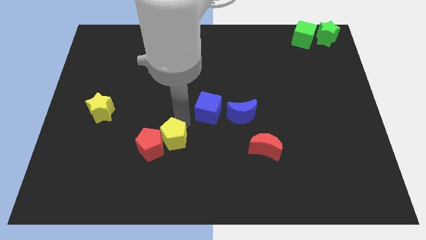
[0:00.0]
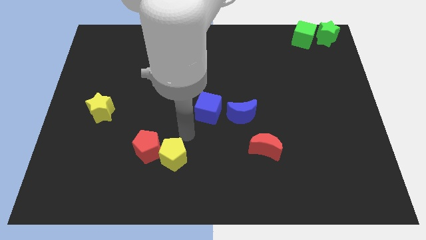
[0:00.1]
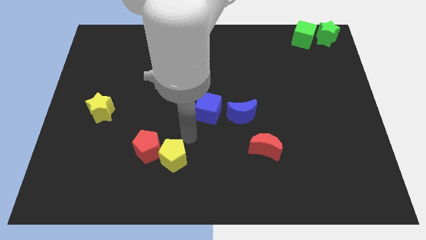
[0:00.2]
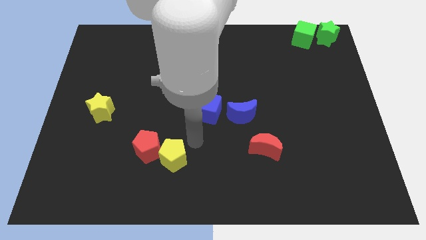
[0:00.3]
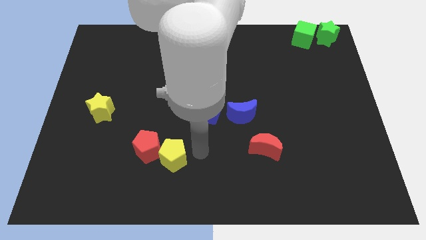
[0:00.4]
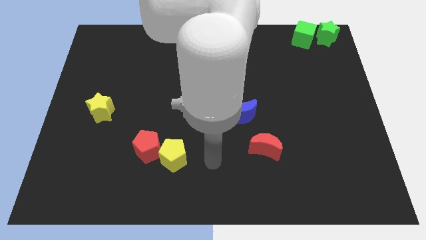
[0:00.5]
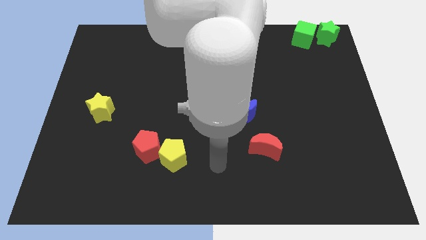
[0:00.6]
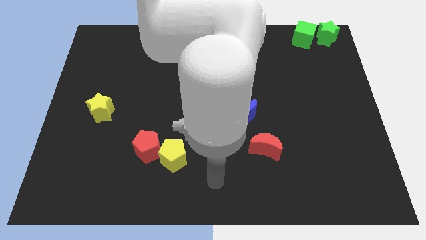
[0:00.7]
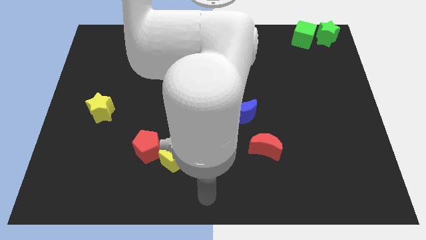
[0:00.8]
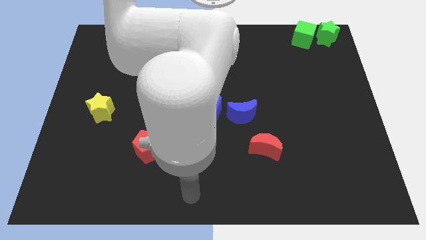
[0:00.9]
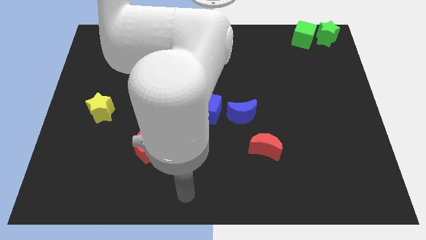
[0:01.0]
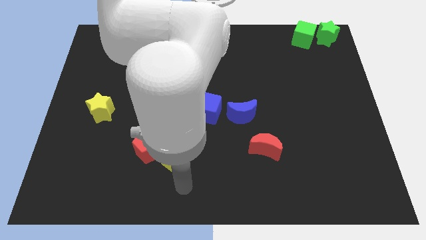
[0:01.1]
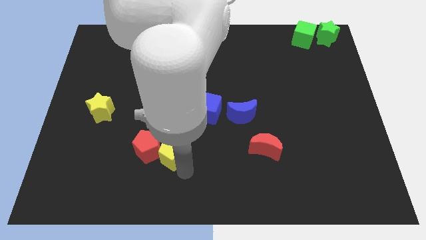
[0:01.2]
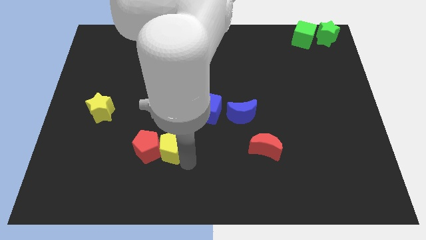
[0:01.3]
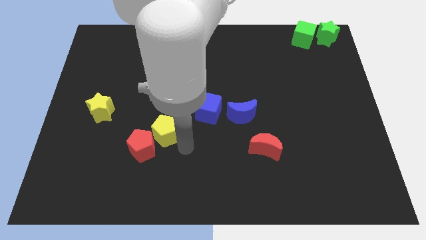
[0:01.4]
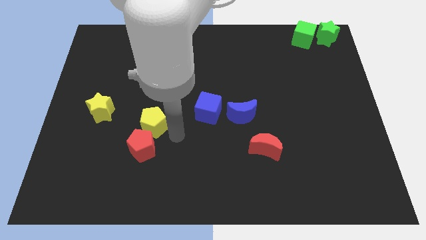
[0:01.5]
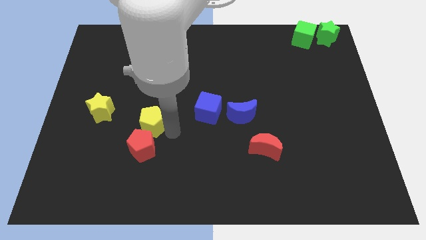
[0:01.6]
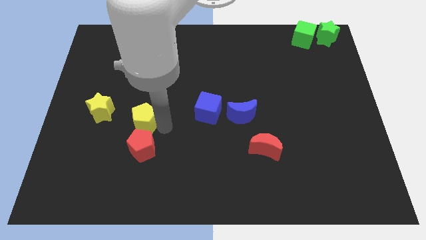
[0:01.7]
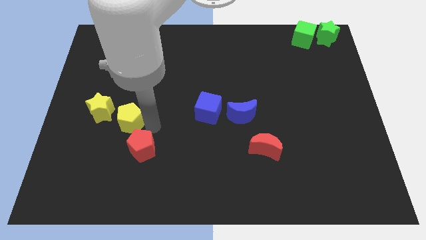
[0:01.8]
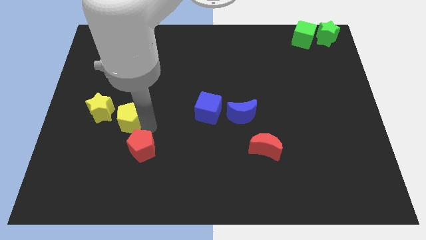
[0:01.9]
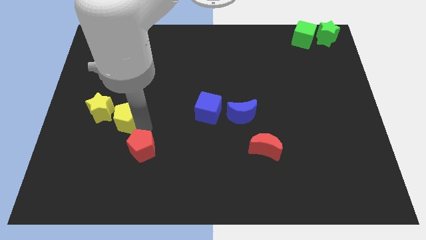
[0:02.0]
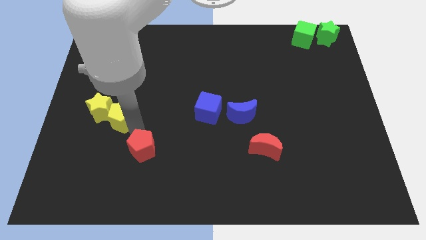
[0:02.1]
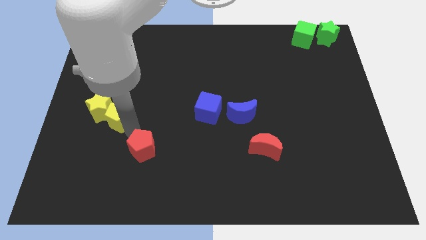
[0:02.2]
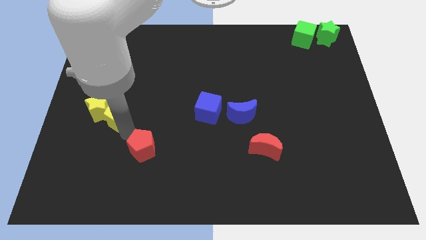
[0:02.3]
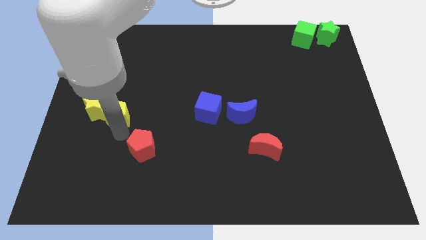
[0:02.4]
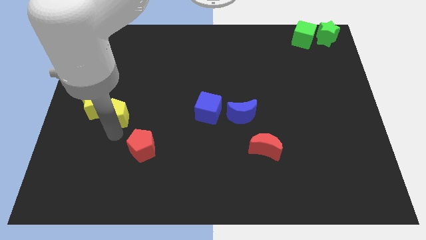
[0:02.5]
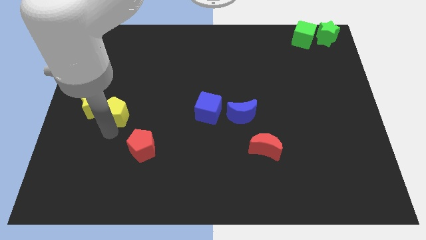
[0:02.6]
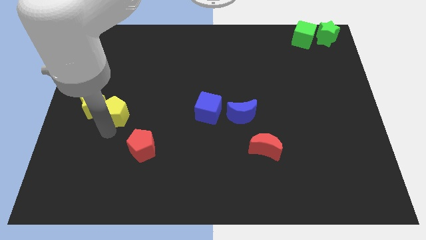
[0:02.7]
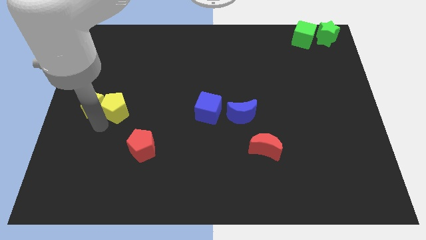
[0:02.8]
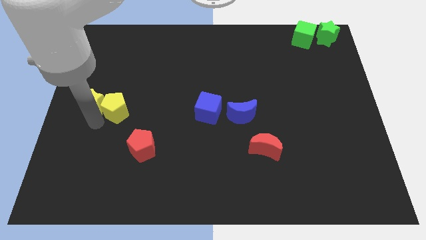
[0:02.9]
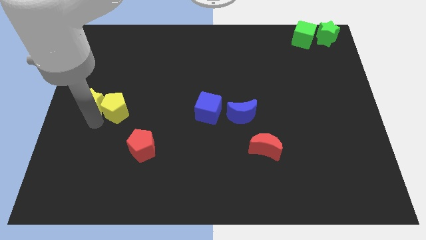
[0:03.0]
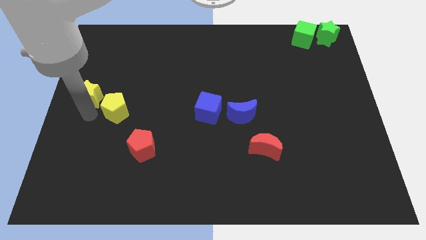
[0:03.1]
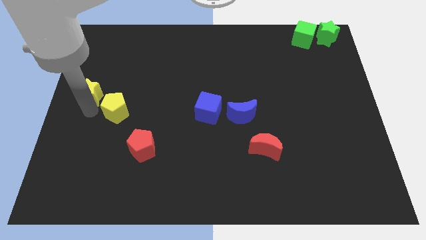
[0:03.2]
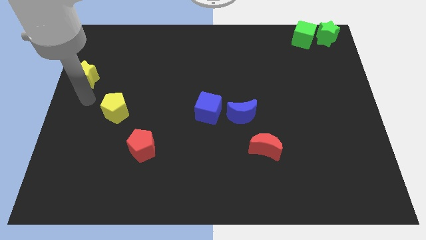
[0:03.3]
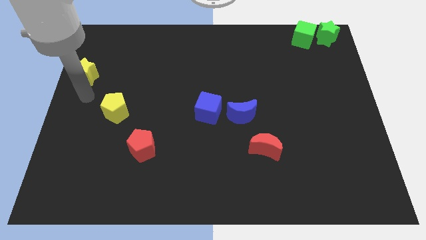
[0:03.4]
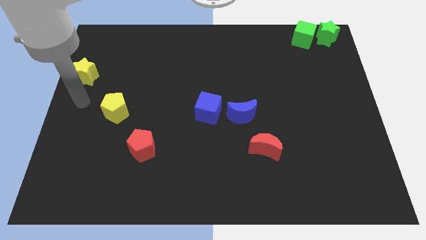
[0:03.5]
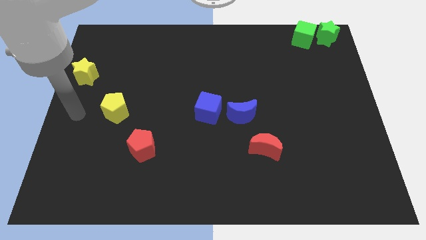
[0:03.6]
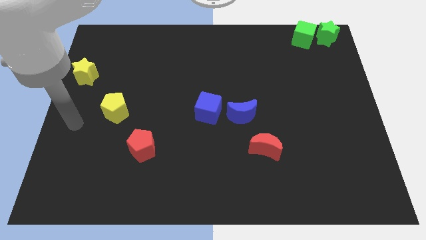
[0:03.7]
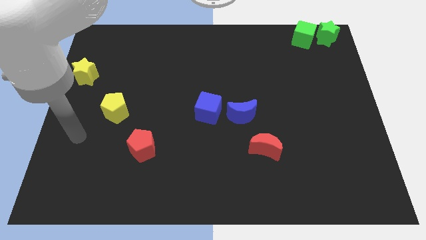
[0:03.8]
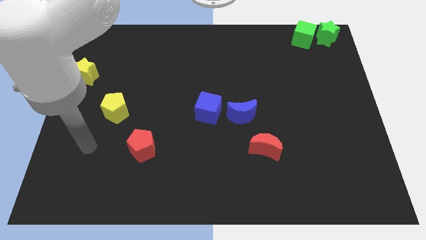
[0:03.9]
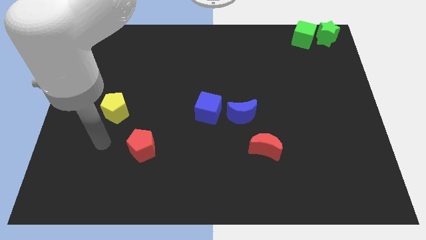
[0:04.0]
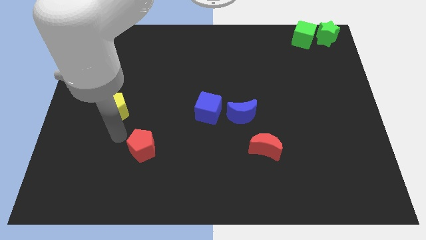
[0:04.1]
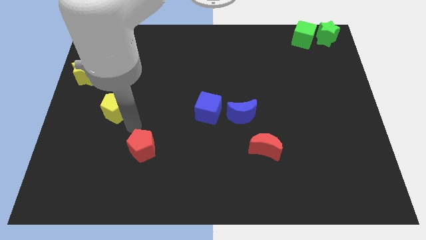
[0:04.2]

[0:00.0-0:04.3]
move yellow pentagon into the yellow star

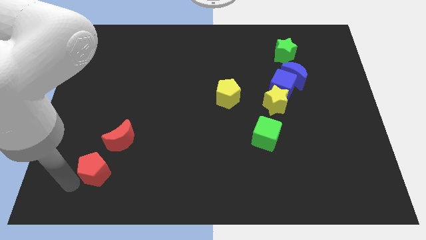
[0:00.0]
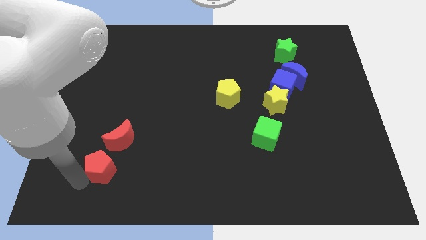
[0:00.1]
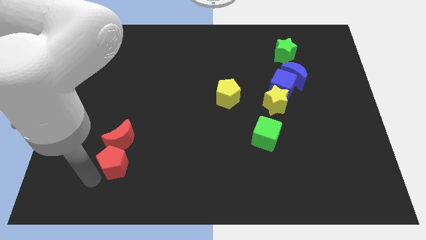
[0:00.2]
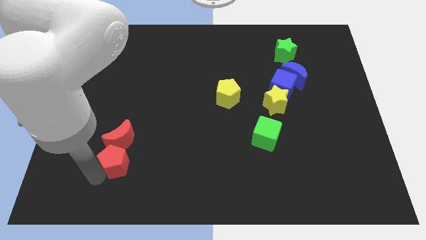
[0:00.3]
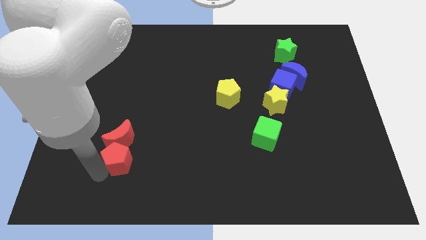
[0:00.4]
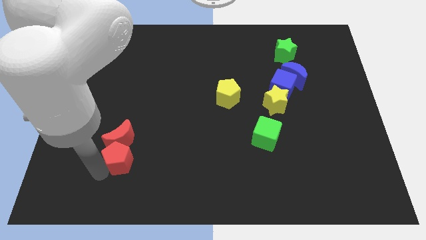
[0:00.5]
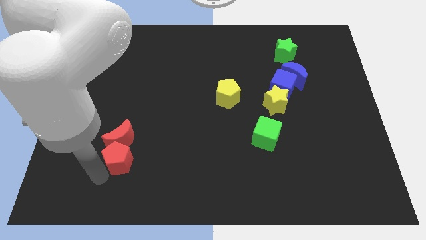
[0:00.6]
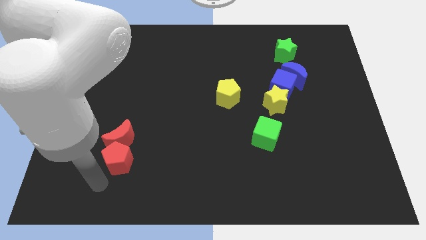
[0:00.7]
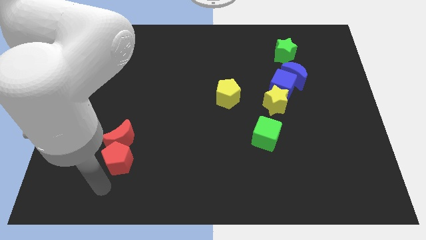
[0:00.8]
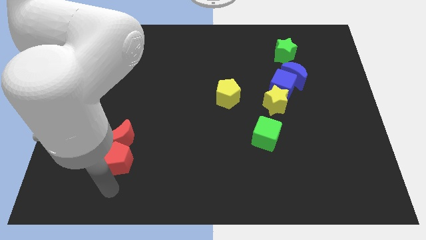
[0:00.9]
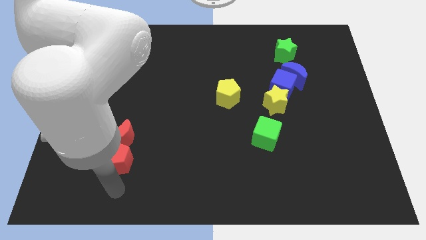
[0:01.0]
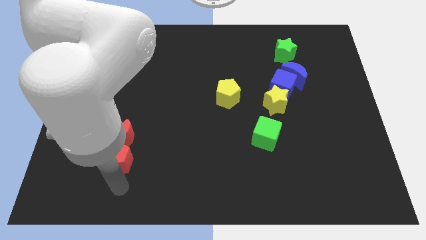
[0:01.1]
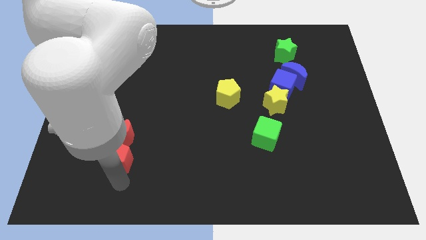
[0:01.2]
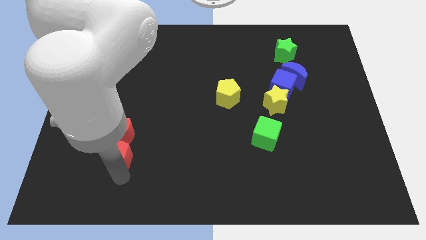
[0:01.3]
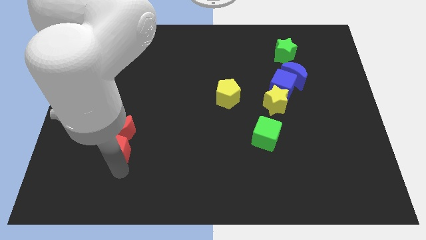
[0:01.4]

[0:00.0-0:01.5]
put the red pentagon into the red moon

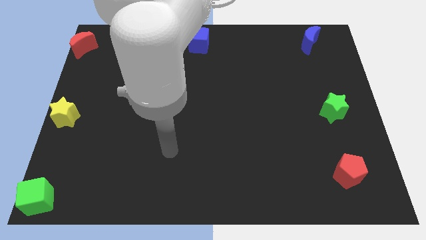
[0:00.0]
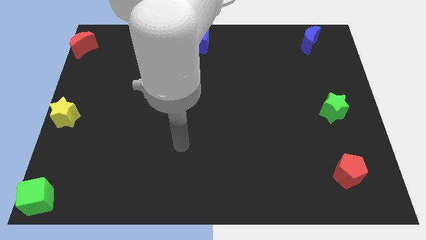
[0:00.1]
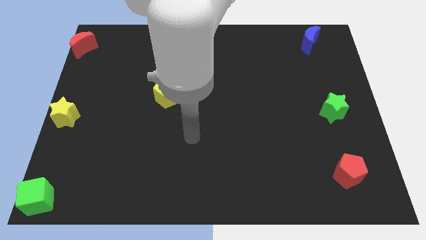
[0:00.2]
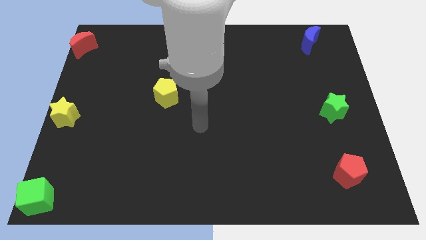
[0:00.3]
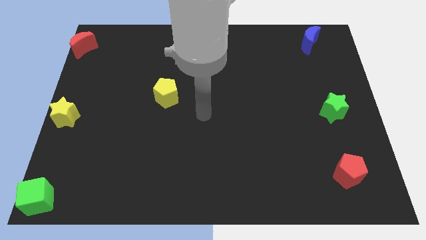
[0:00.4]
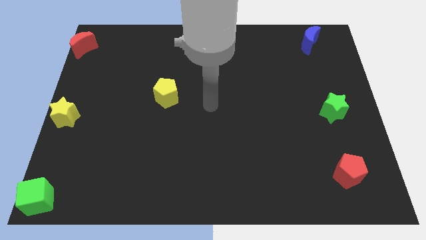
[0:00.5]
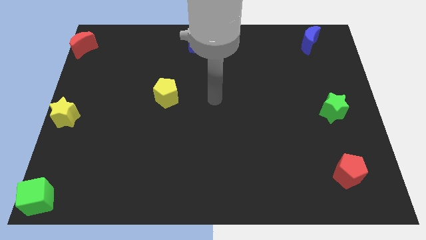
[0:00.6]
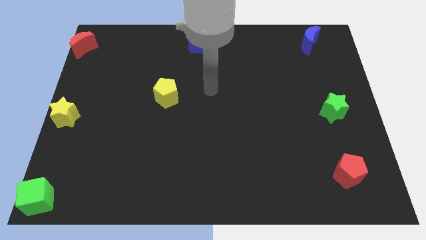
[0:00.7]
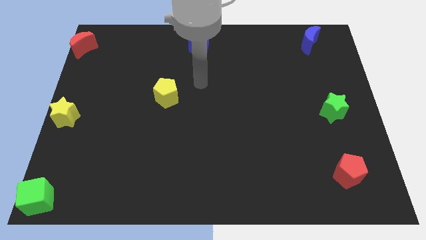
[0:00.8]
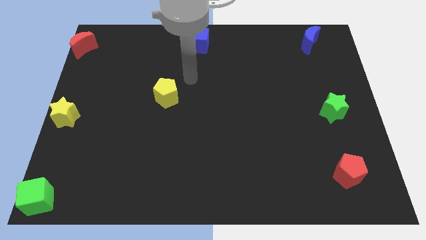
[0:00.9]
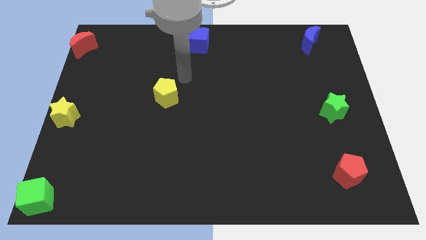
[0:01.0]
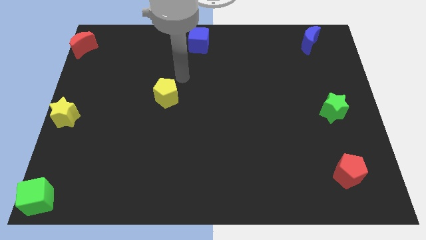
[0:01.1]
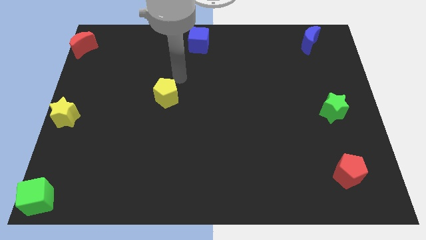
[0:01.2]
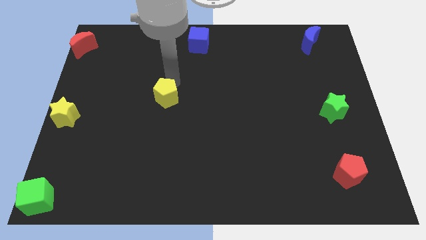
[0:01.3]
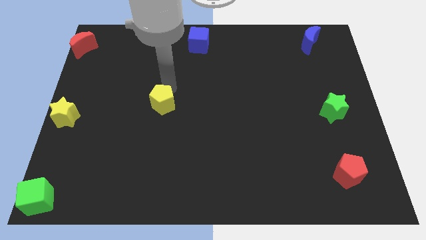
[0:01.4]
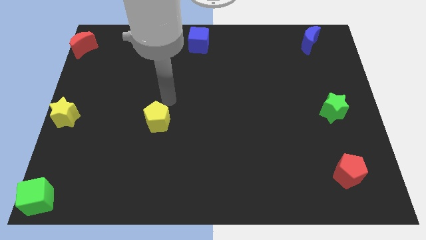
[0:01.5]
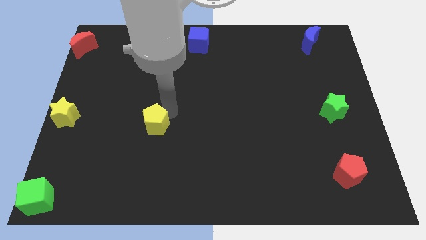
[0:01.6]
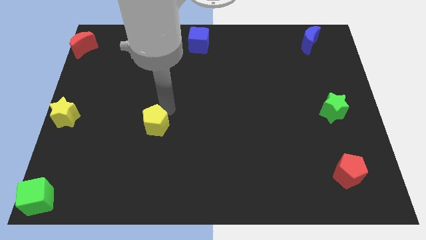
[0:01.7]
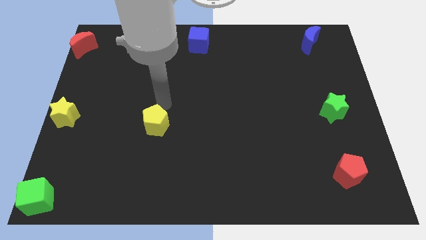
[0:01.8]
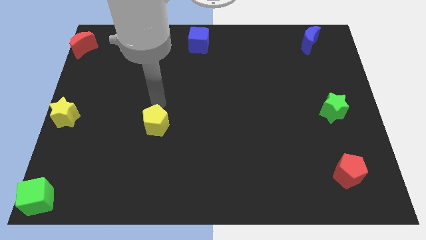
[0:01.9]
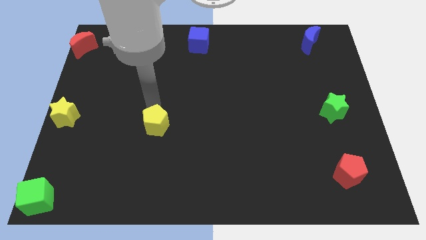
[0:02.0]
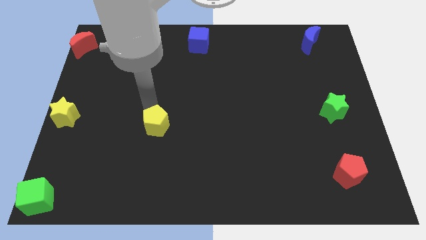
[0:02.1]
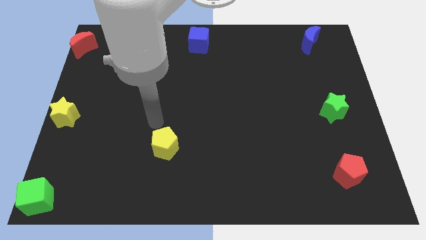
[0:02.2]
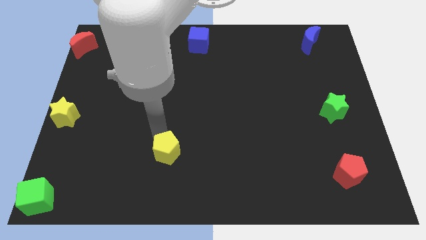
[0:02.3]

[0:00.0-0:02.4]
move the yellow pentagon to the center of the board

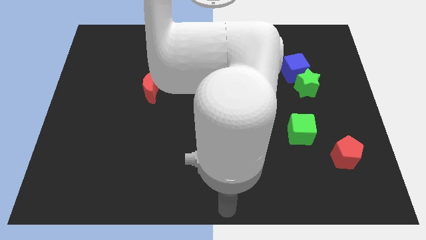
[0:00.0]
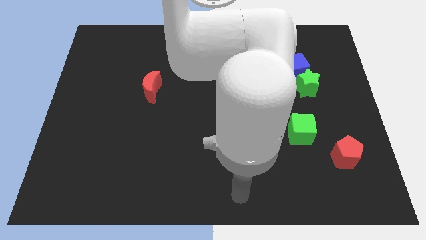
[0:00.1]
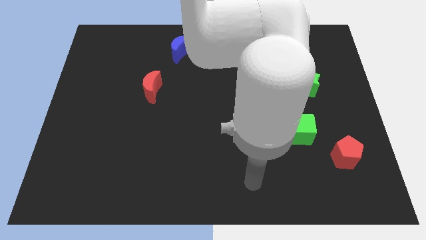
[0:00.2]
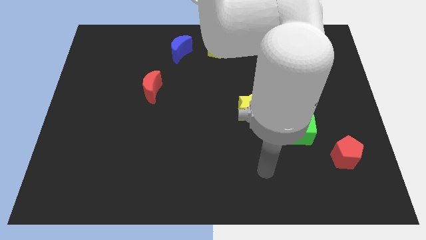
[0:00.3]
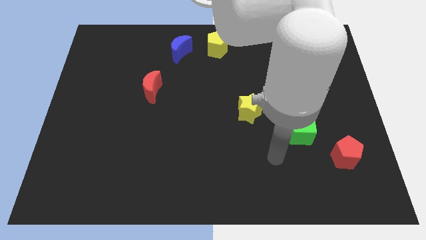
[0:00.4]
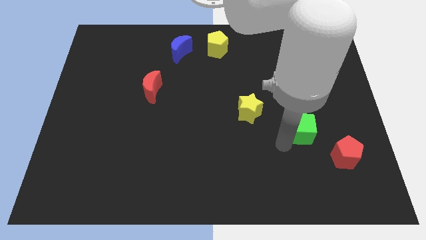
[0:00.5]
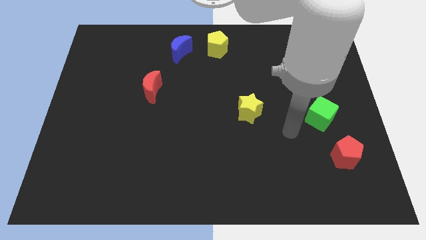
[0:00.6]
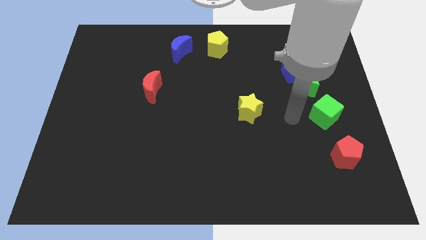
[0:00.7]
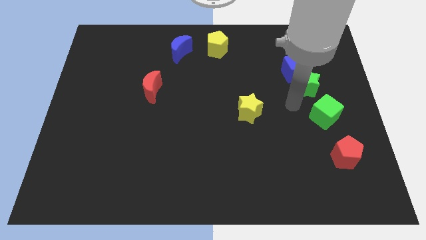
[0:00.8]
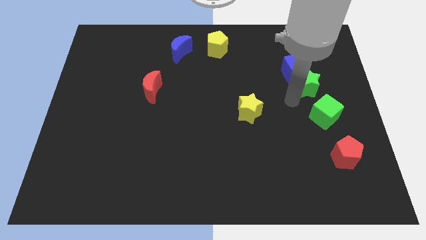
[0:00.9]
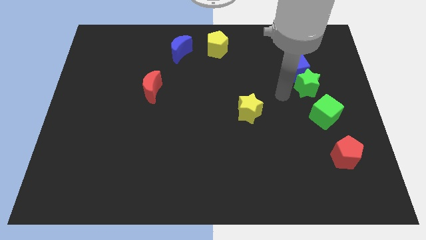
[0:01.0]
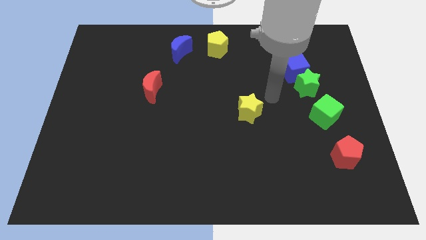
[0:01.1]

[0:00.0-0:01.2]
place green cube in between the green star and red pentagon
